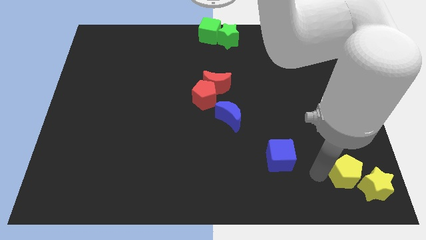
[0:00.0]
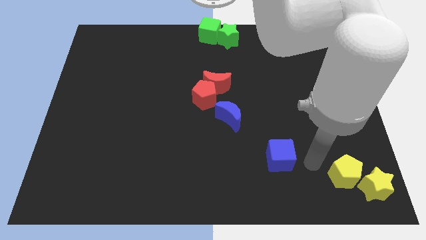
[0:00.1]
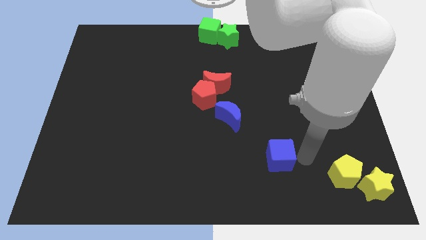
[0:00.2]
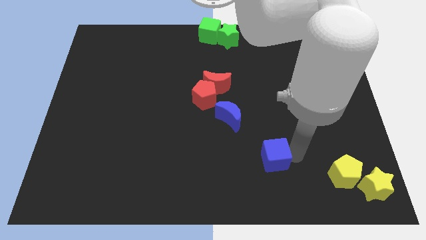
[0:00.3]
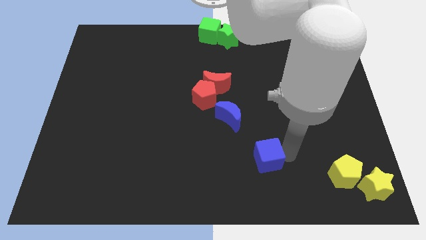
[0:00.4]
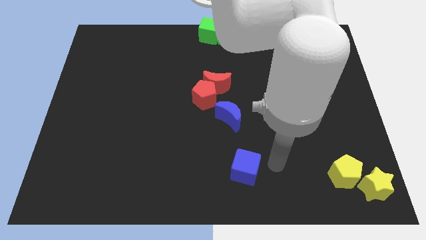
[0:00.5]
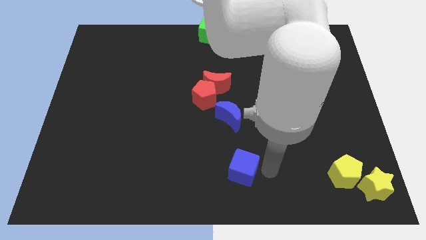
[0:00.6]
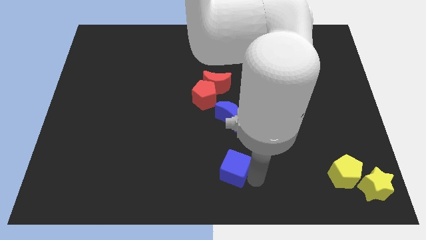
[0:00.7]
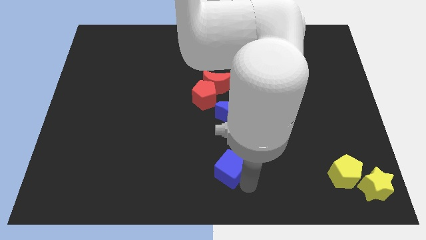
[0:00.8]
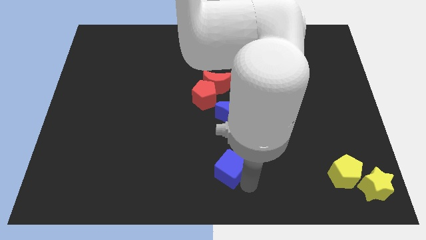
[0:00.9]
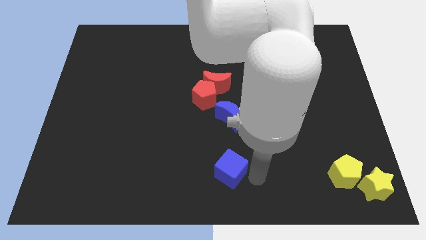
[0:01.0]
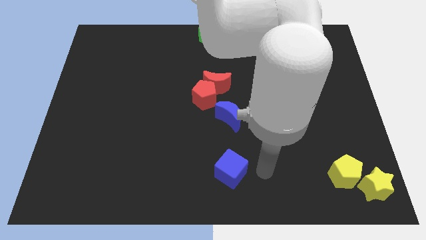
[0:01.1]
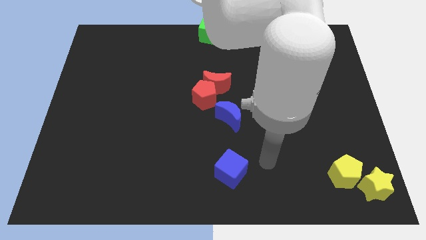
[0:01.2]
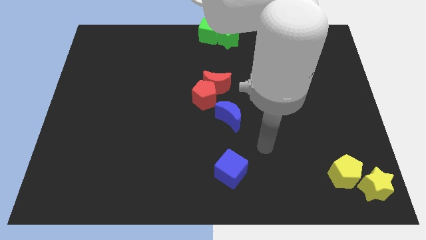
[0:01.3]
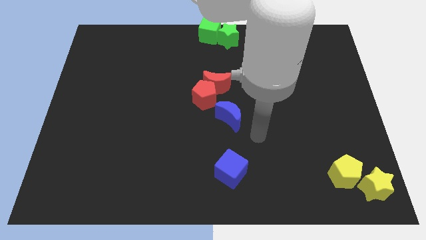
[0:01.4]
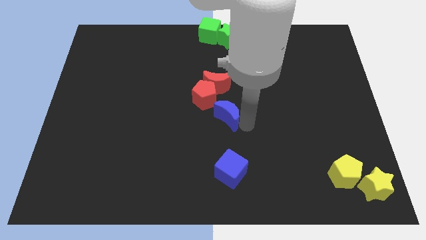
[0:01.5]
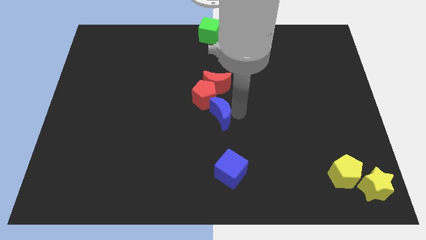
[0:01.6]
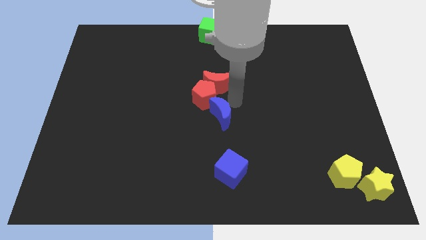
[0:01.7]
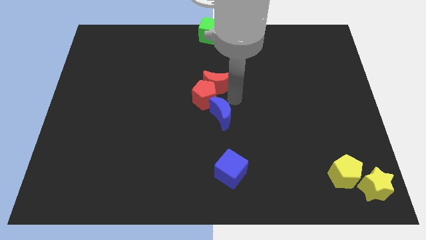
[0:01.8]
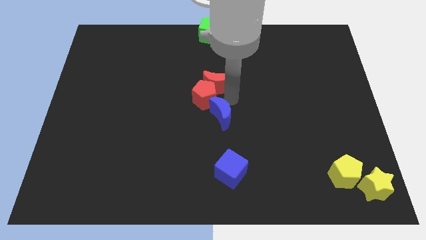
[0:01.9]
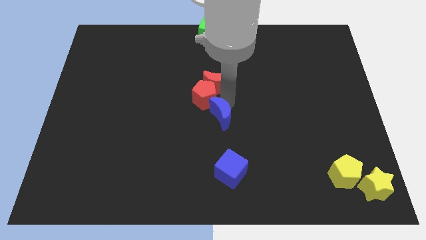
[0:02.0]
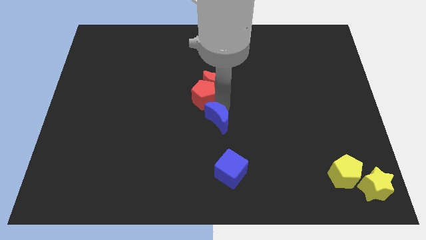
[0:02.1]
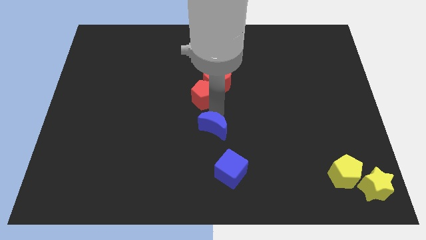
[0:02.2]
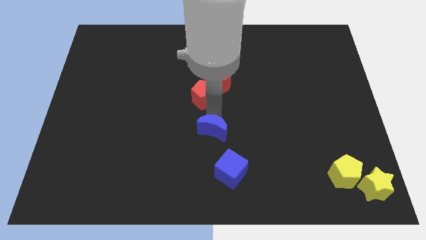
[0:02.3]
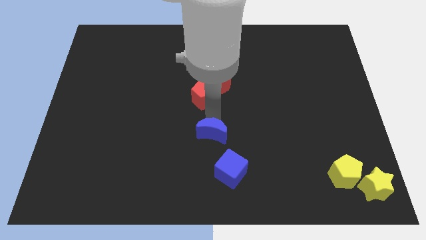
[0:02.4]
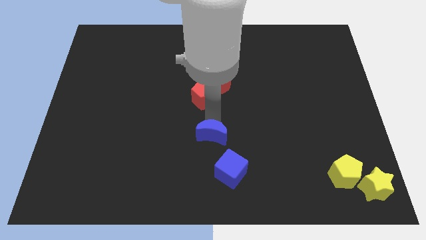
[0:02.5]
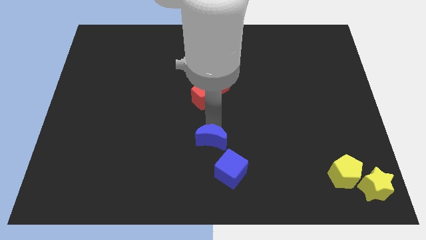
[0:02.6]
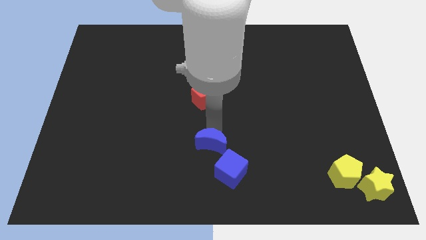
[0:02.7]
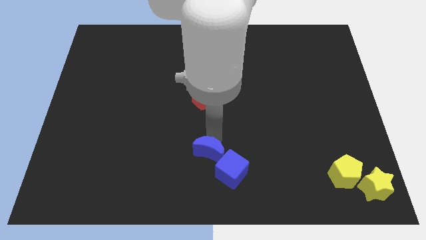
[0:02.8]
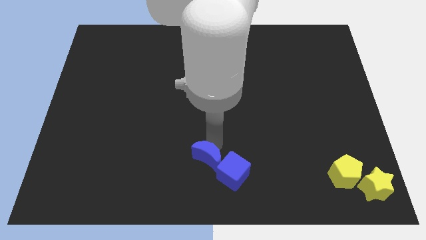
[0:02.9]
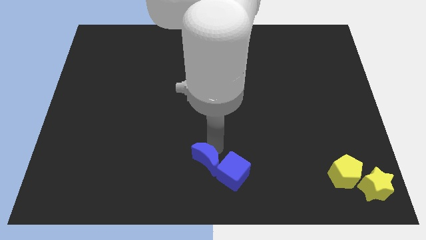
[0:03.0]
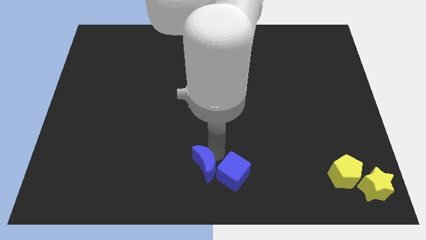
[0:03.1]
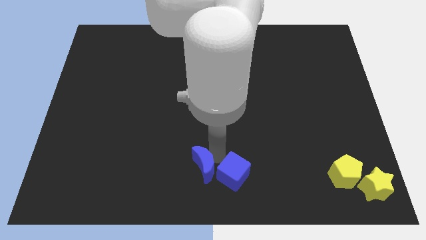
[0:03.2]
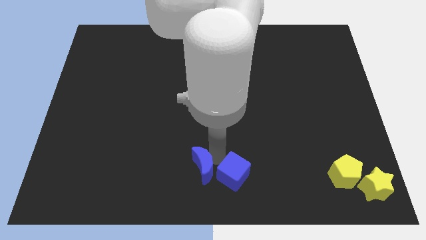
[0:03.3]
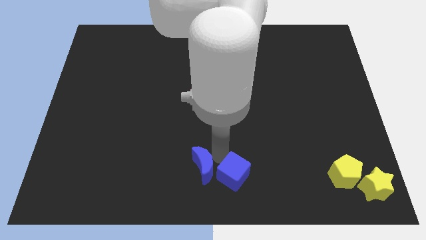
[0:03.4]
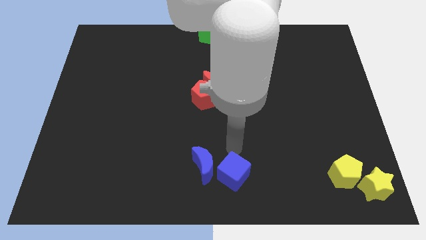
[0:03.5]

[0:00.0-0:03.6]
place the blue blocks vertically below the red blocks

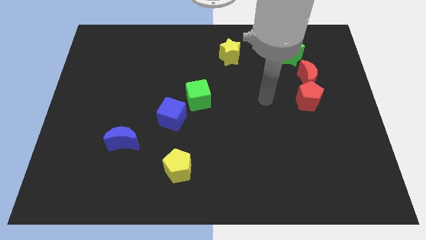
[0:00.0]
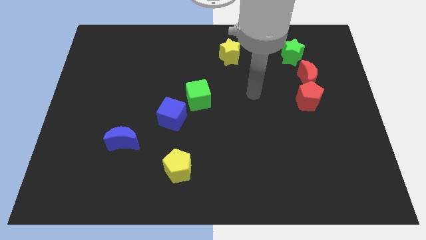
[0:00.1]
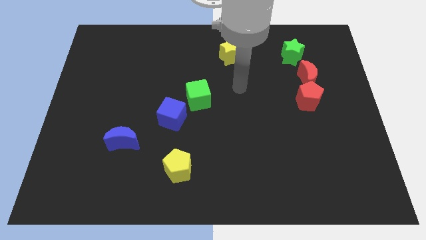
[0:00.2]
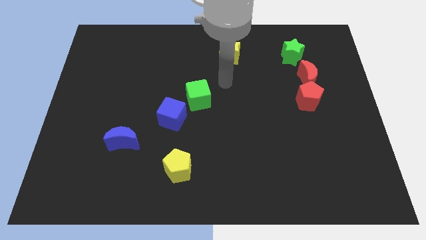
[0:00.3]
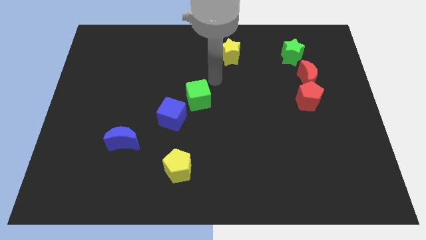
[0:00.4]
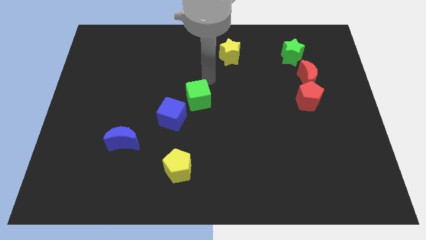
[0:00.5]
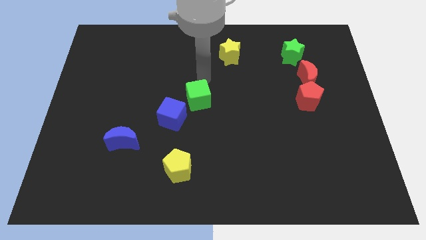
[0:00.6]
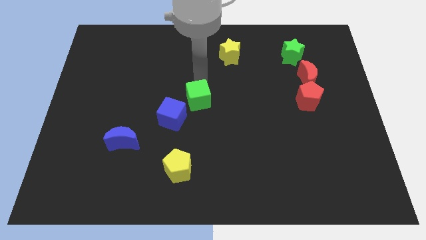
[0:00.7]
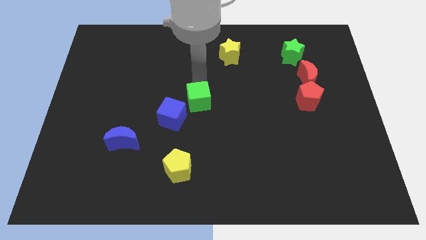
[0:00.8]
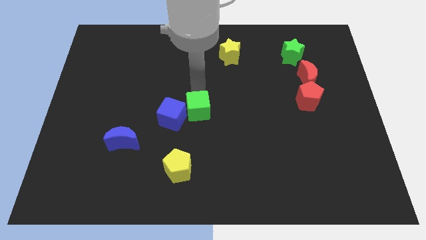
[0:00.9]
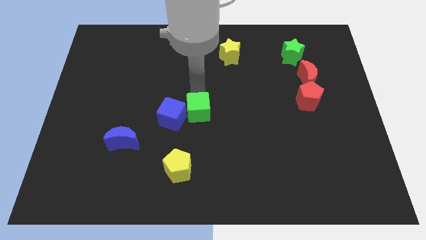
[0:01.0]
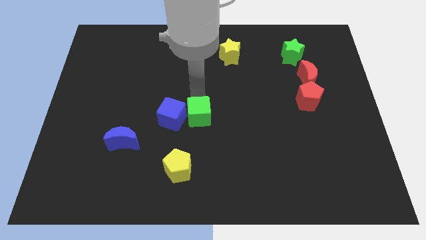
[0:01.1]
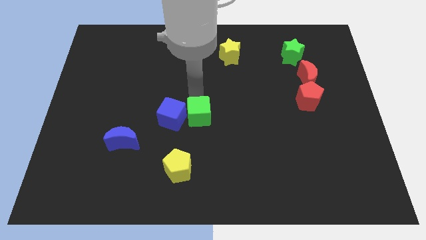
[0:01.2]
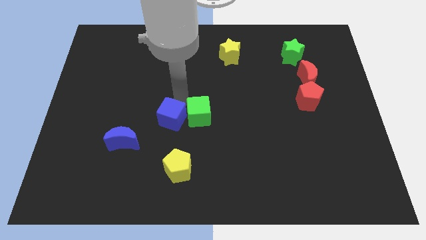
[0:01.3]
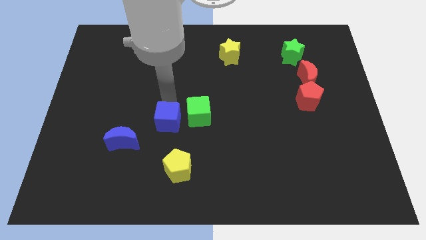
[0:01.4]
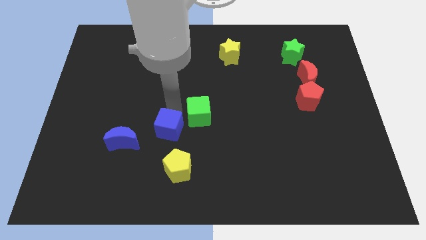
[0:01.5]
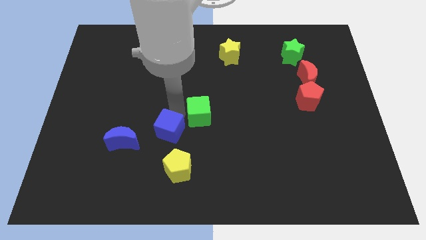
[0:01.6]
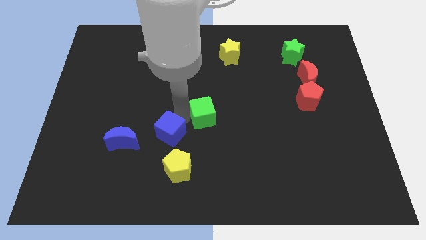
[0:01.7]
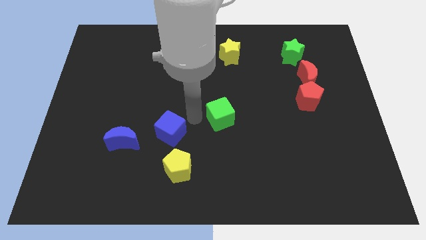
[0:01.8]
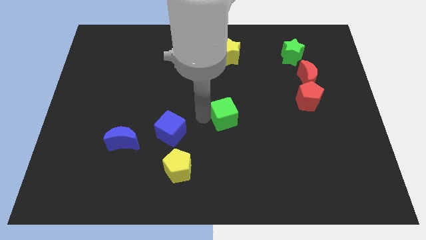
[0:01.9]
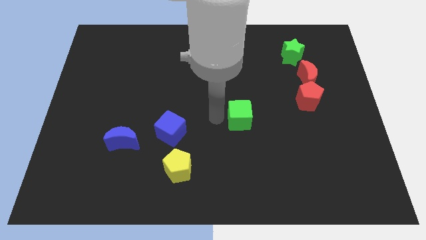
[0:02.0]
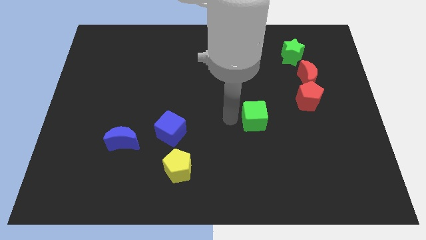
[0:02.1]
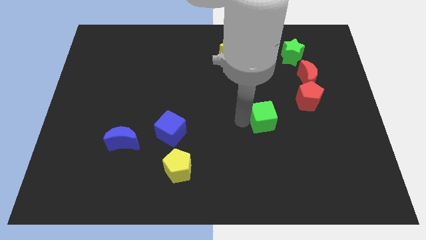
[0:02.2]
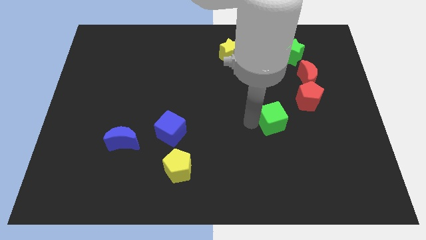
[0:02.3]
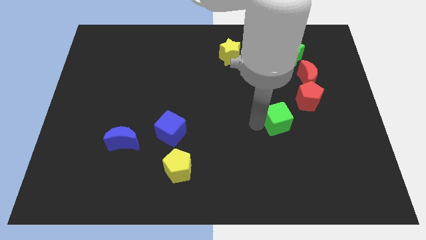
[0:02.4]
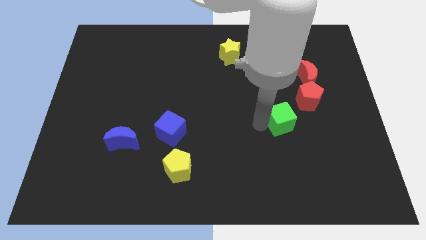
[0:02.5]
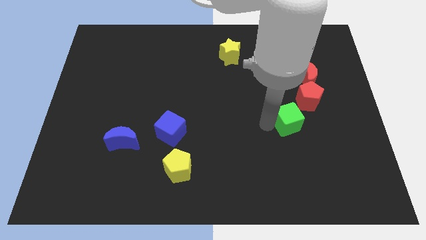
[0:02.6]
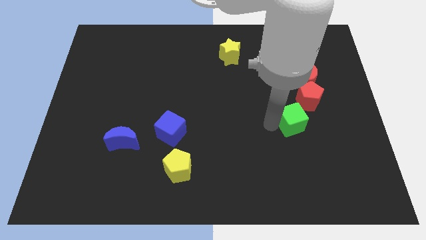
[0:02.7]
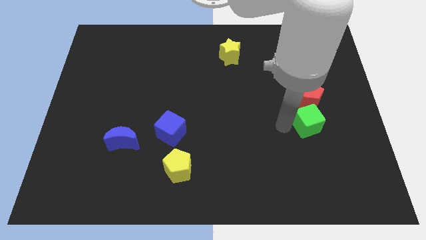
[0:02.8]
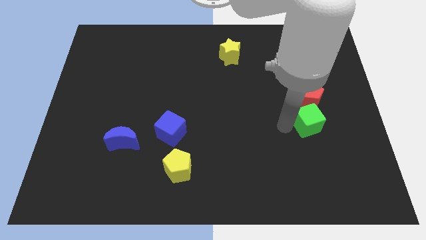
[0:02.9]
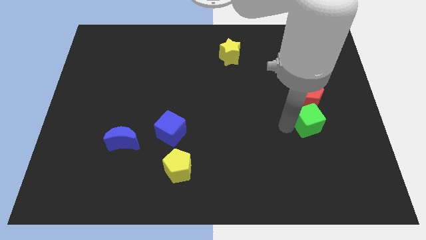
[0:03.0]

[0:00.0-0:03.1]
separate the green cube from the blue cube

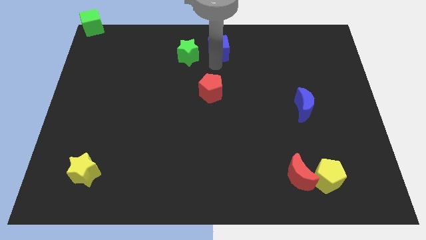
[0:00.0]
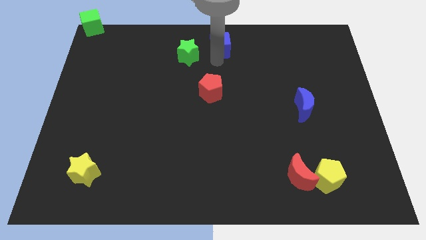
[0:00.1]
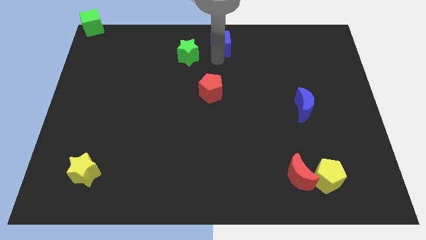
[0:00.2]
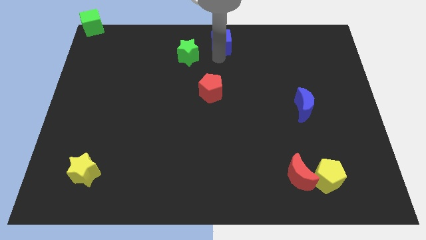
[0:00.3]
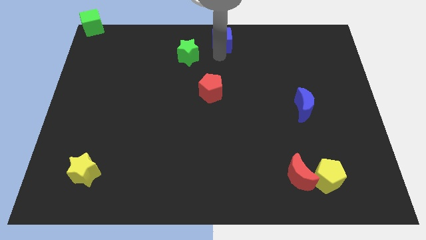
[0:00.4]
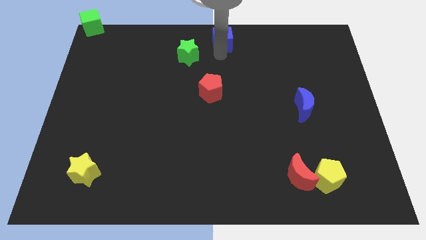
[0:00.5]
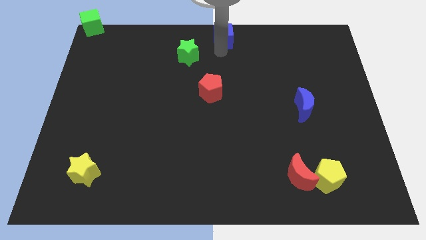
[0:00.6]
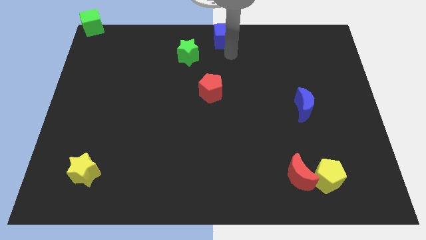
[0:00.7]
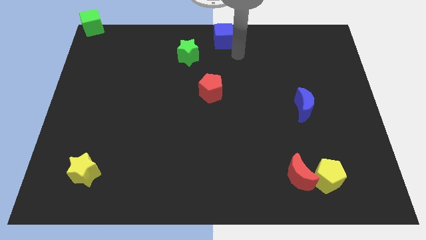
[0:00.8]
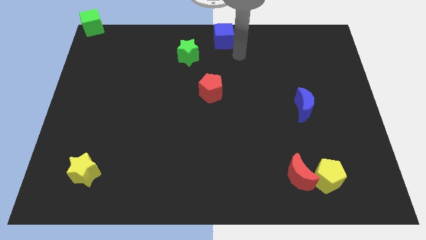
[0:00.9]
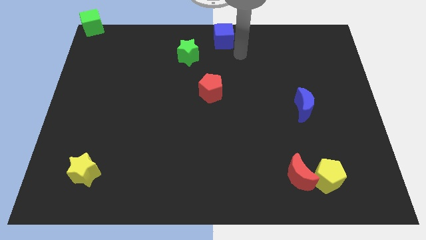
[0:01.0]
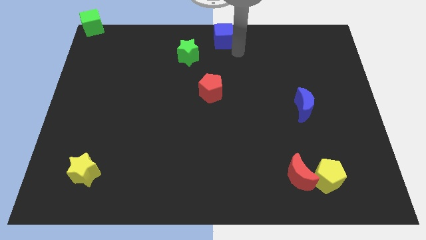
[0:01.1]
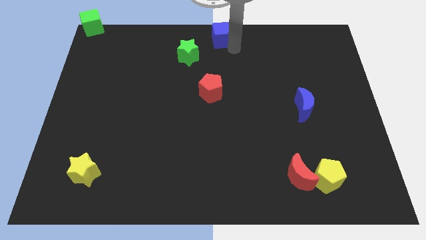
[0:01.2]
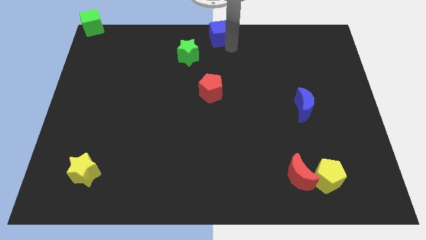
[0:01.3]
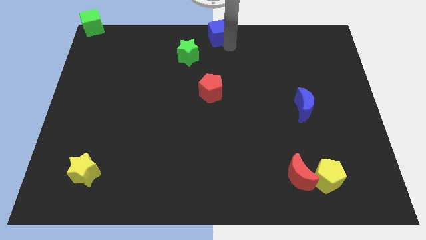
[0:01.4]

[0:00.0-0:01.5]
move the blue cube to the top center of the table

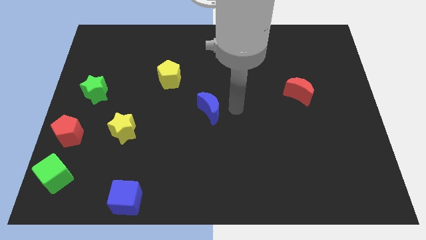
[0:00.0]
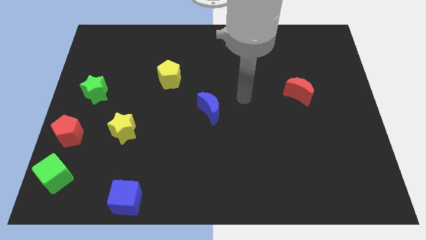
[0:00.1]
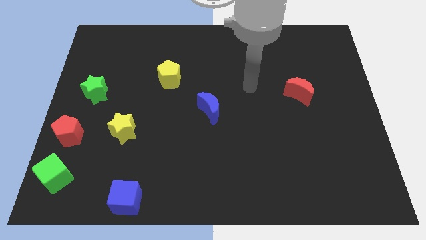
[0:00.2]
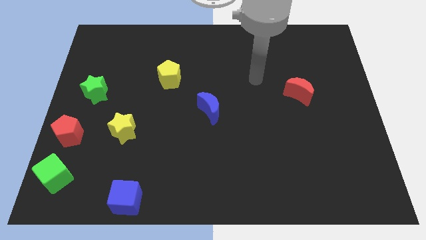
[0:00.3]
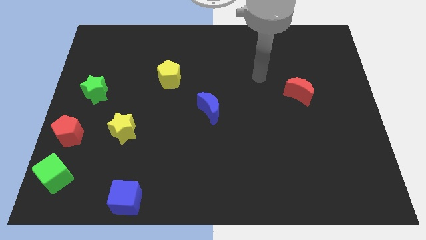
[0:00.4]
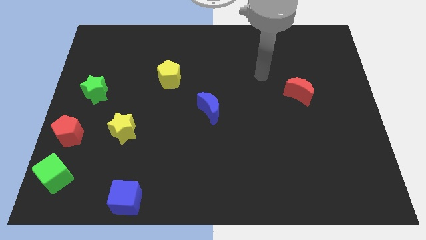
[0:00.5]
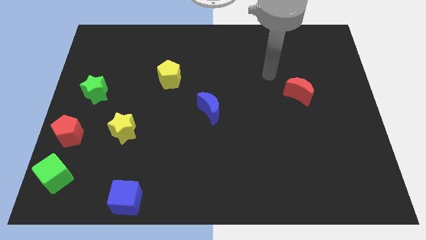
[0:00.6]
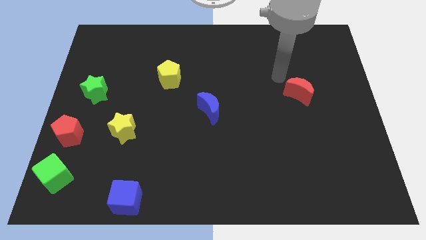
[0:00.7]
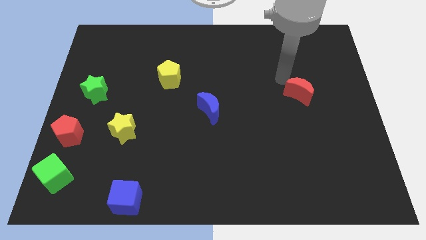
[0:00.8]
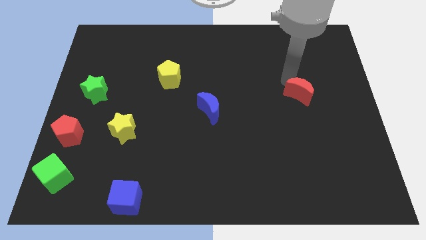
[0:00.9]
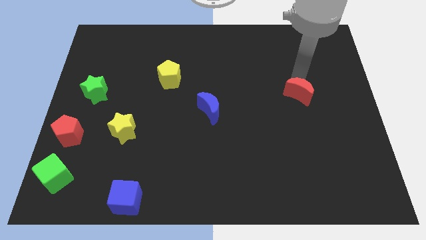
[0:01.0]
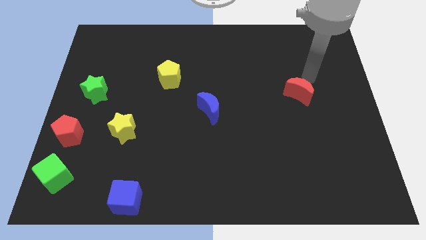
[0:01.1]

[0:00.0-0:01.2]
place your arm at the top of the red crescent
